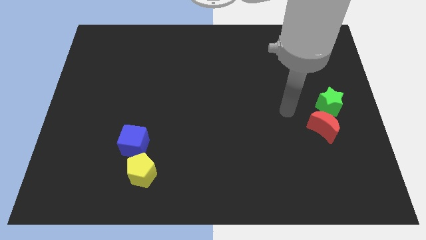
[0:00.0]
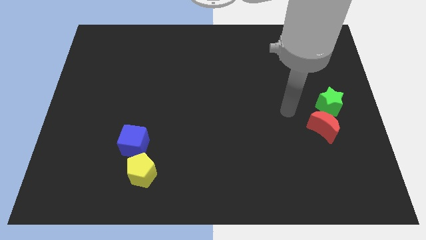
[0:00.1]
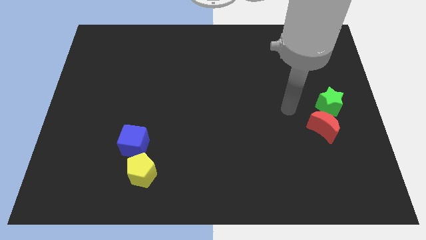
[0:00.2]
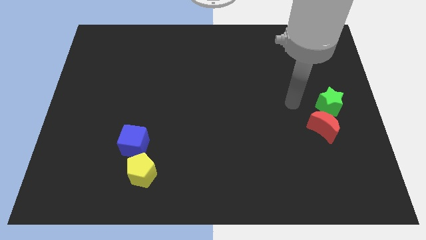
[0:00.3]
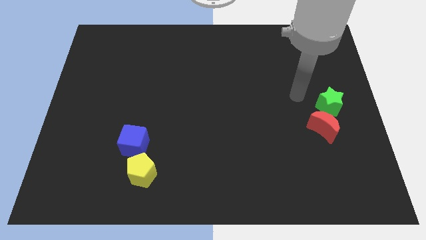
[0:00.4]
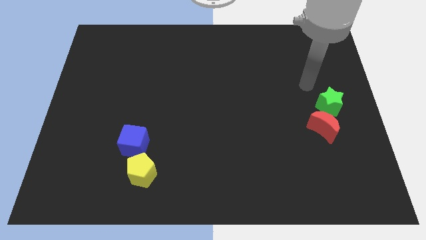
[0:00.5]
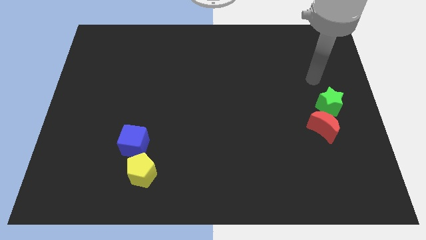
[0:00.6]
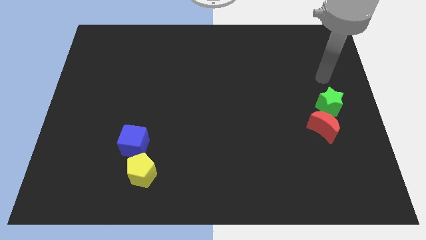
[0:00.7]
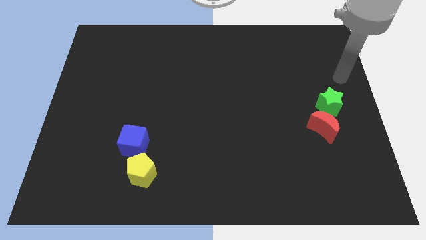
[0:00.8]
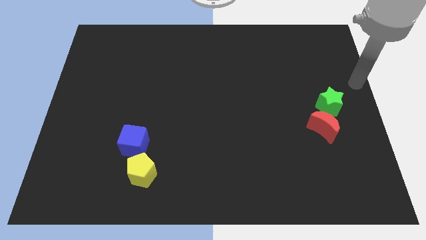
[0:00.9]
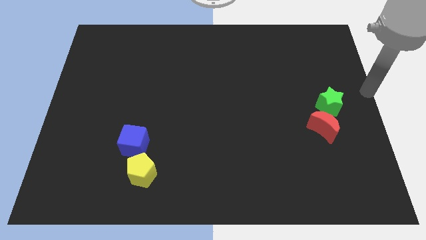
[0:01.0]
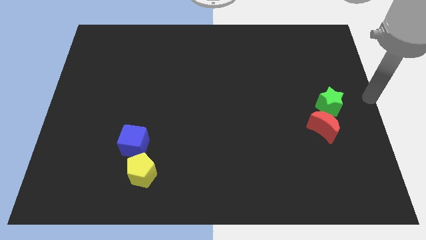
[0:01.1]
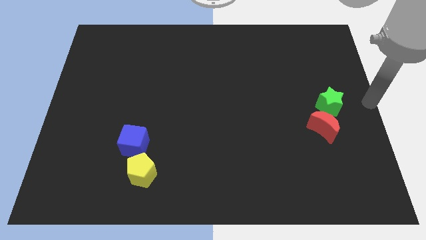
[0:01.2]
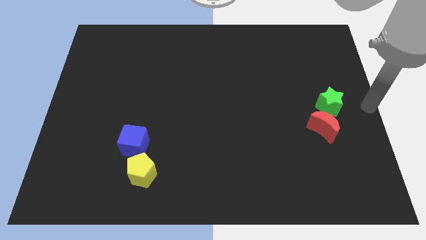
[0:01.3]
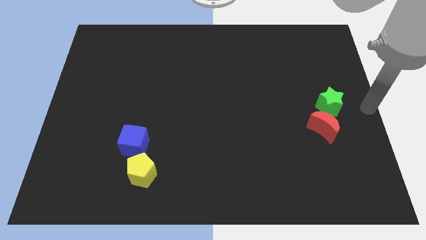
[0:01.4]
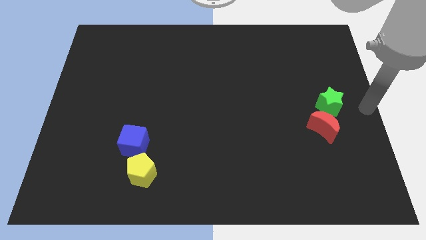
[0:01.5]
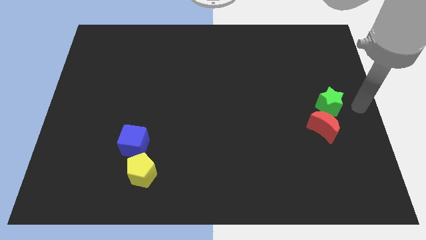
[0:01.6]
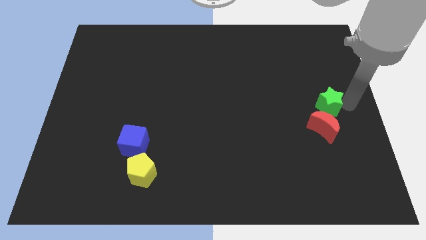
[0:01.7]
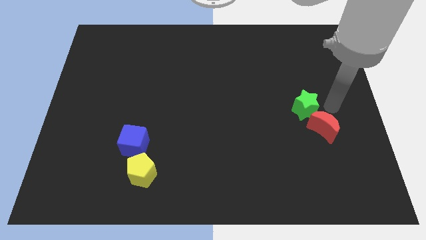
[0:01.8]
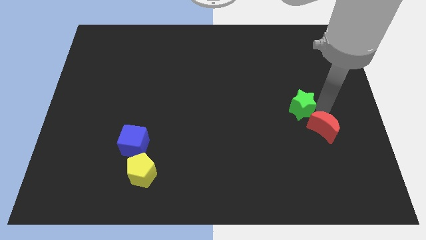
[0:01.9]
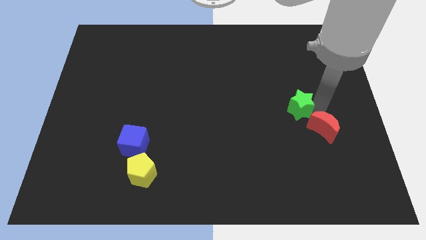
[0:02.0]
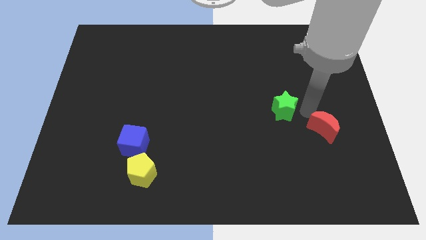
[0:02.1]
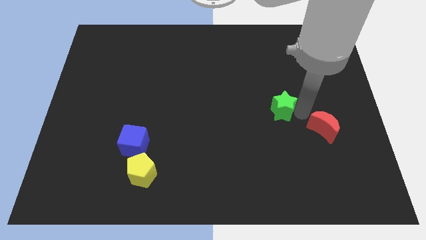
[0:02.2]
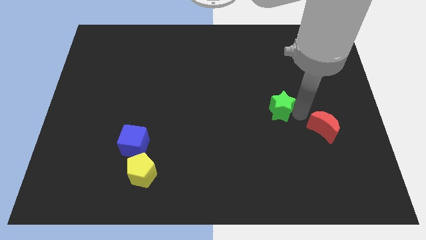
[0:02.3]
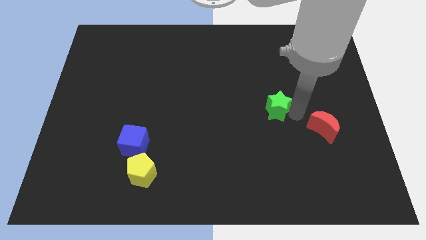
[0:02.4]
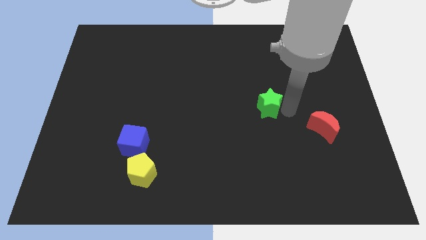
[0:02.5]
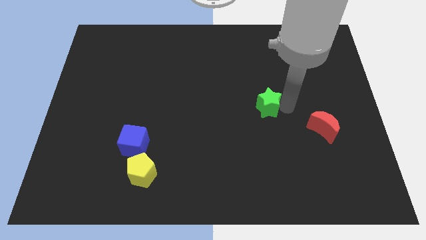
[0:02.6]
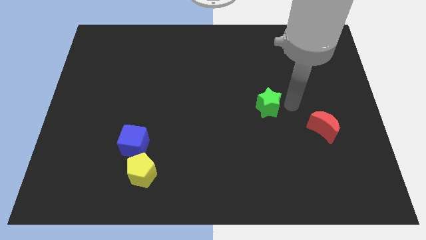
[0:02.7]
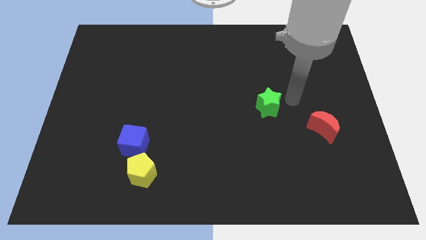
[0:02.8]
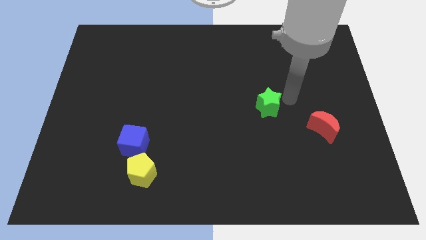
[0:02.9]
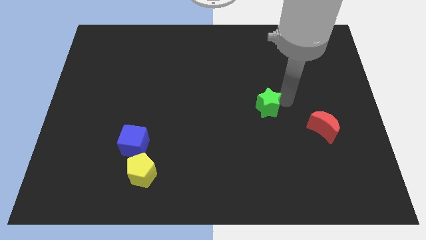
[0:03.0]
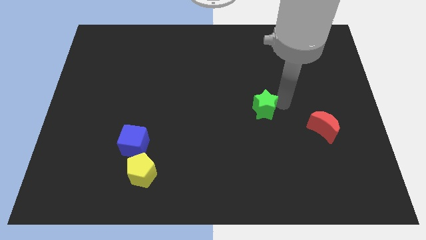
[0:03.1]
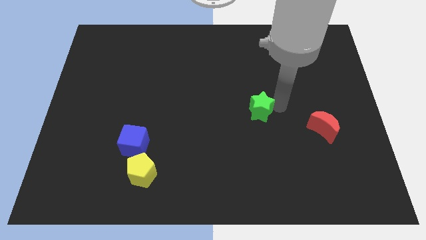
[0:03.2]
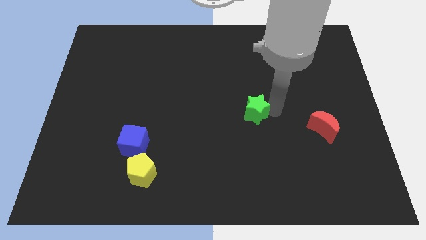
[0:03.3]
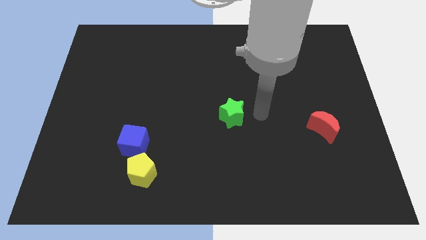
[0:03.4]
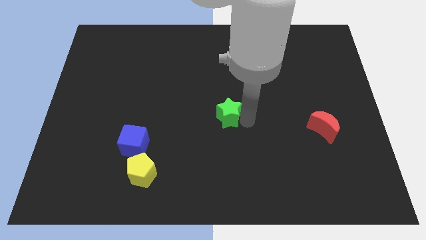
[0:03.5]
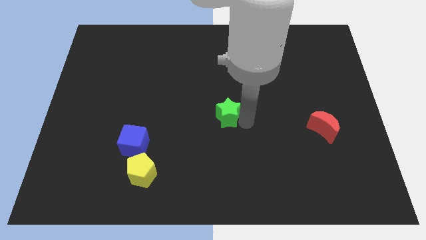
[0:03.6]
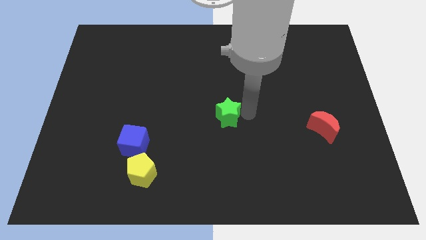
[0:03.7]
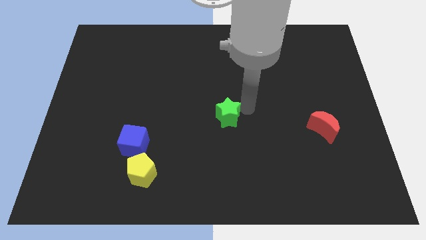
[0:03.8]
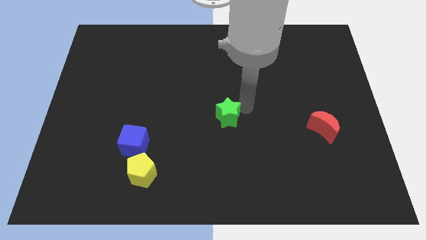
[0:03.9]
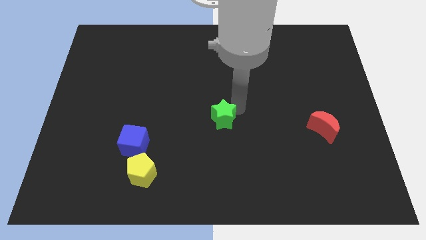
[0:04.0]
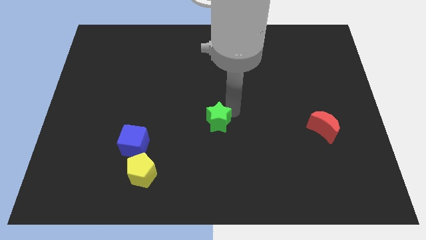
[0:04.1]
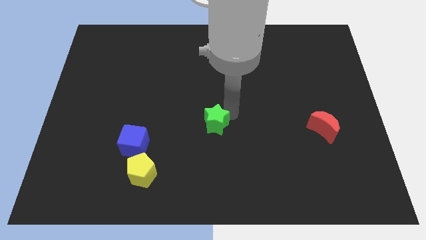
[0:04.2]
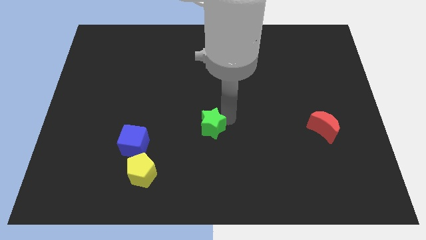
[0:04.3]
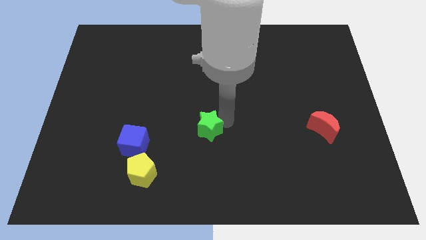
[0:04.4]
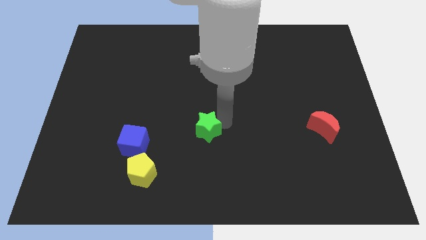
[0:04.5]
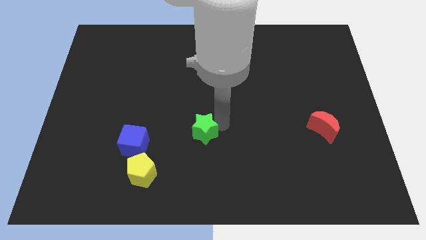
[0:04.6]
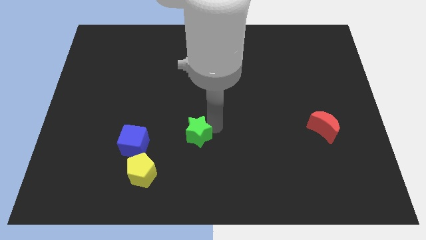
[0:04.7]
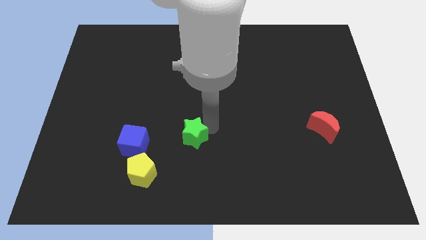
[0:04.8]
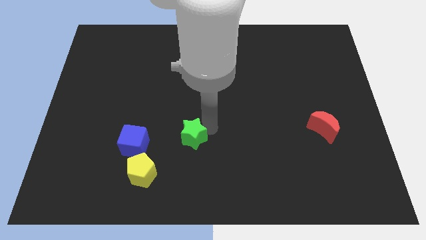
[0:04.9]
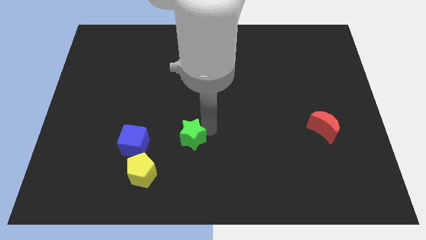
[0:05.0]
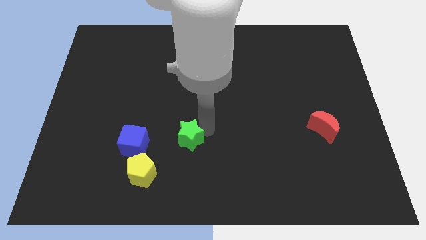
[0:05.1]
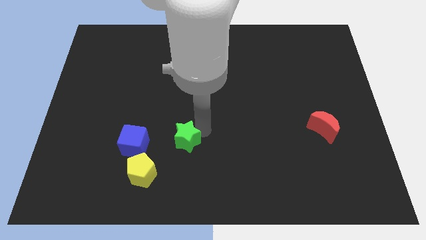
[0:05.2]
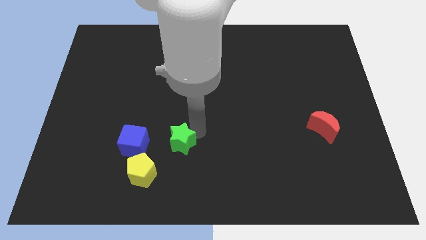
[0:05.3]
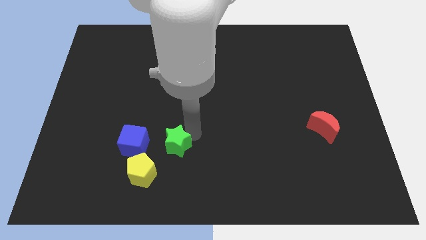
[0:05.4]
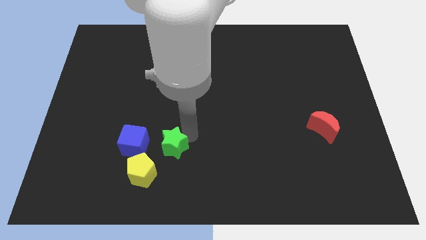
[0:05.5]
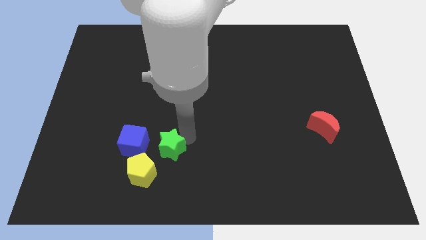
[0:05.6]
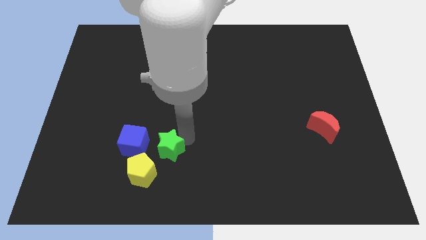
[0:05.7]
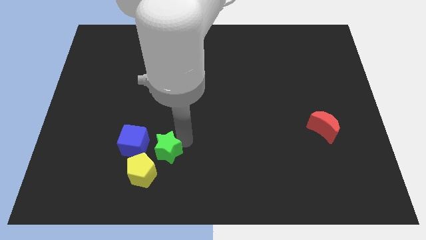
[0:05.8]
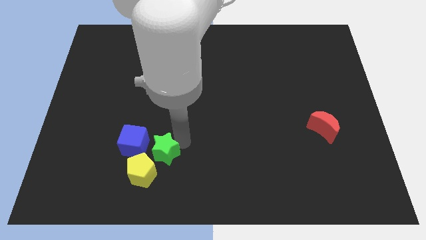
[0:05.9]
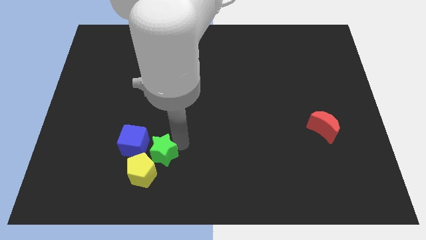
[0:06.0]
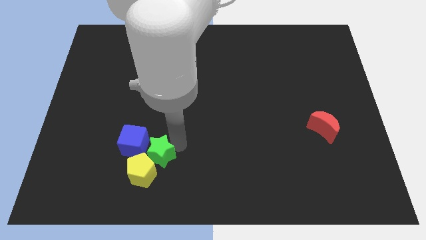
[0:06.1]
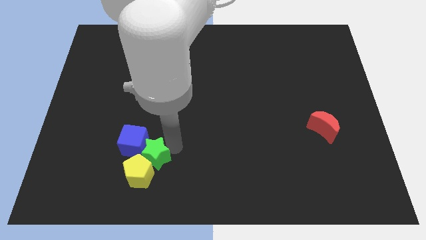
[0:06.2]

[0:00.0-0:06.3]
push the green star next to the yellow pentagon

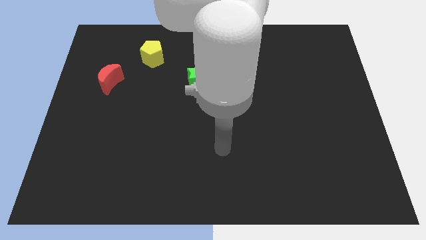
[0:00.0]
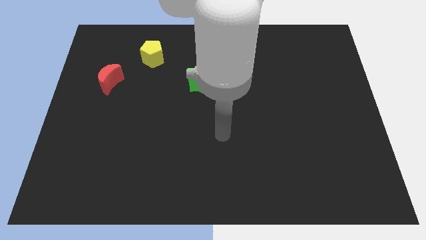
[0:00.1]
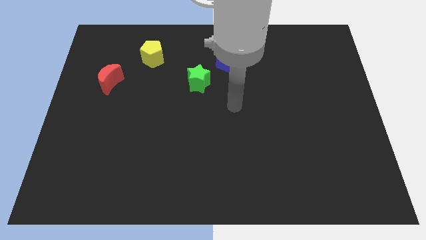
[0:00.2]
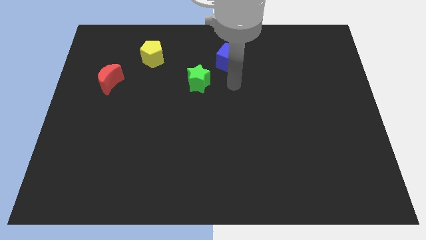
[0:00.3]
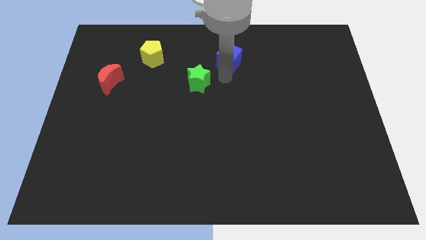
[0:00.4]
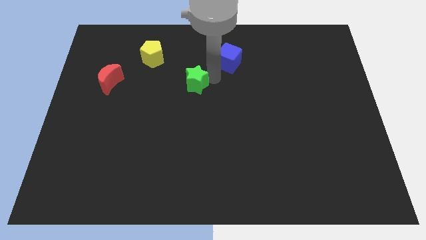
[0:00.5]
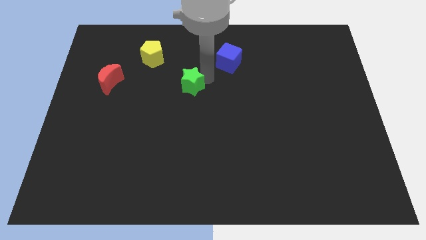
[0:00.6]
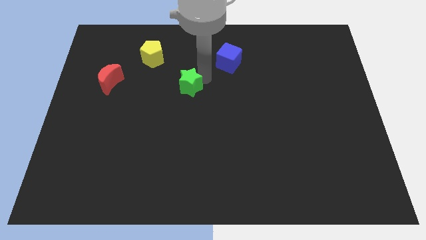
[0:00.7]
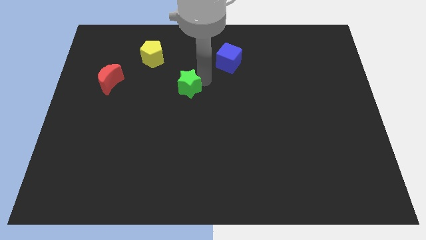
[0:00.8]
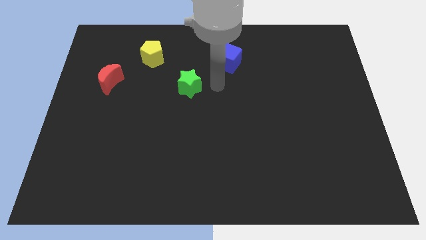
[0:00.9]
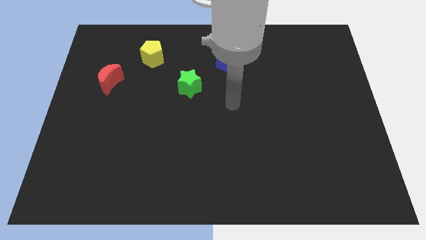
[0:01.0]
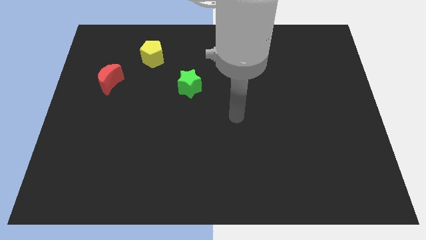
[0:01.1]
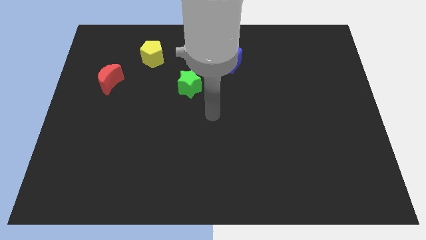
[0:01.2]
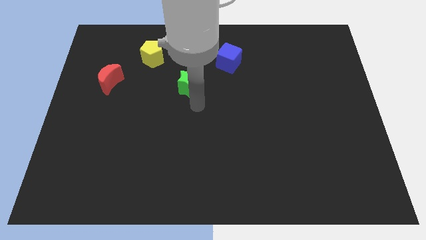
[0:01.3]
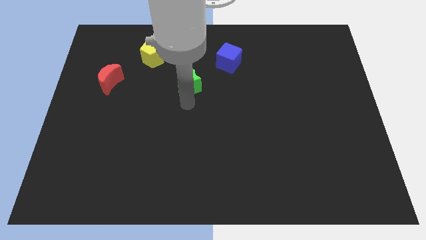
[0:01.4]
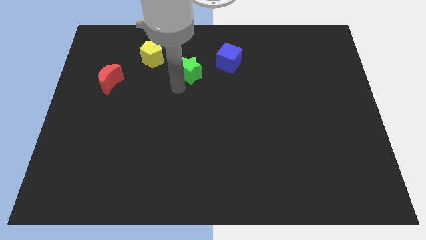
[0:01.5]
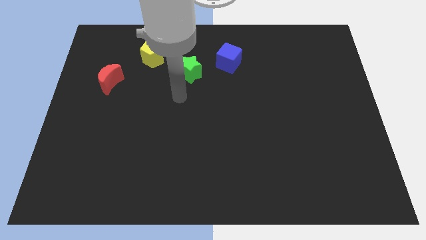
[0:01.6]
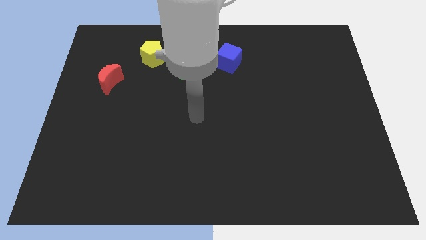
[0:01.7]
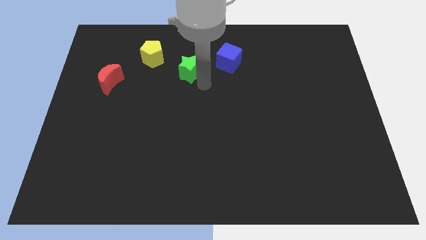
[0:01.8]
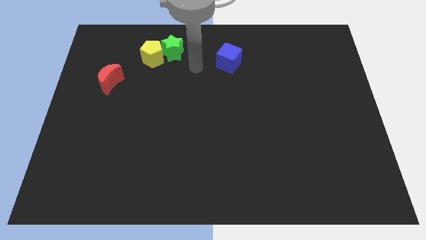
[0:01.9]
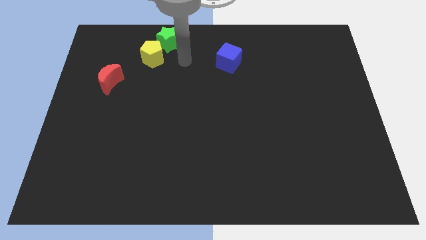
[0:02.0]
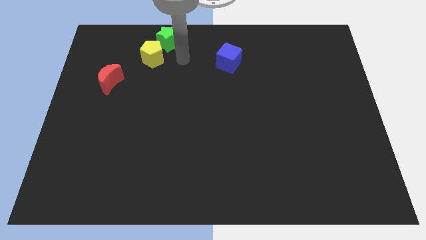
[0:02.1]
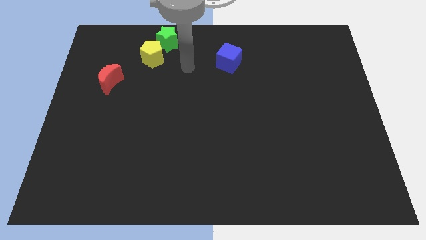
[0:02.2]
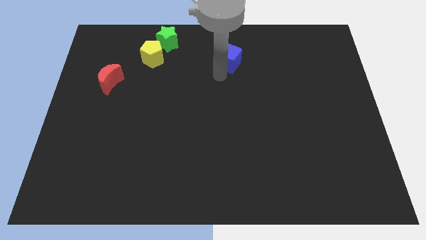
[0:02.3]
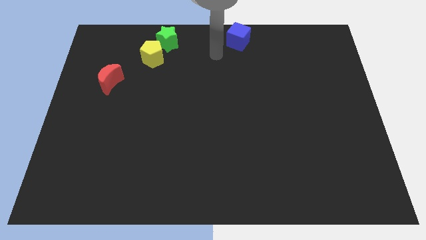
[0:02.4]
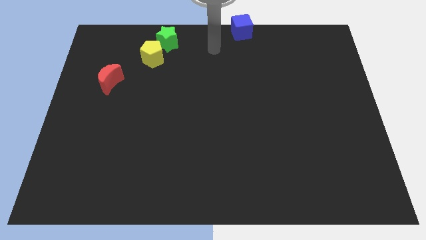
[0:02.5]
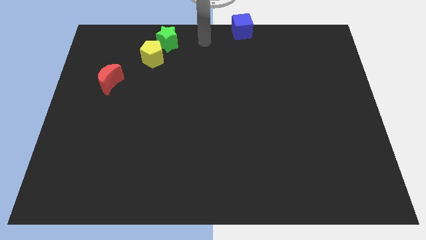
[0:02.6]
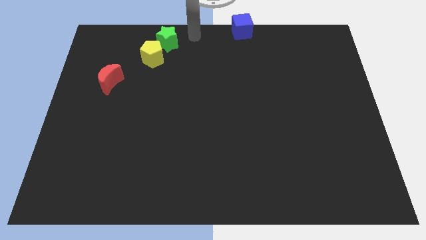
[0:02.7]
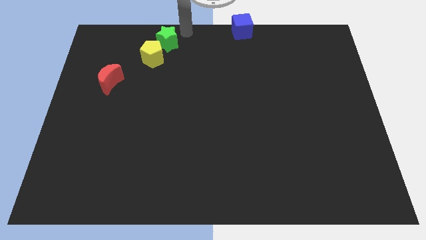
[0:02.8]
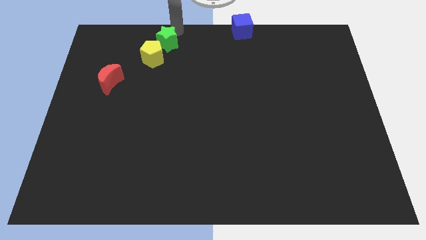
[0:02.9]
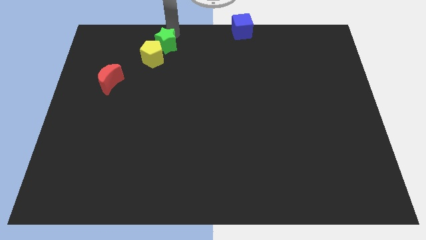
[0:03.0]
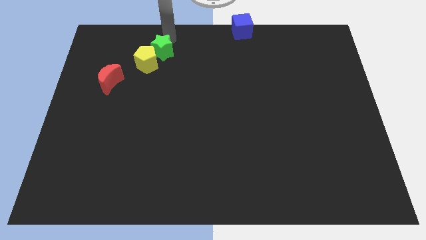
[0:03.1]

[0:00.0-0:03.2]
move the green star next to the yellow block
